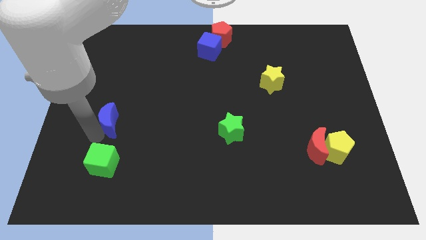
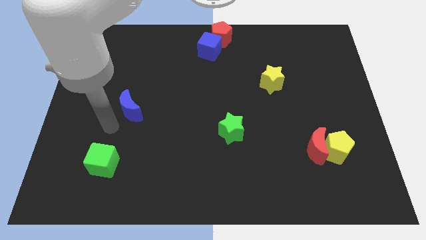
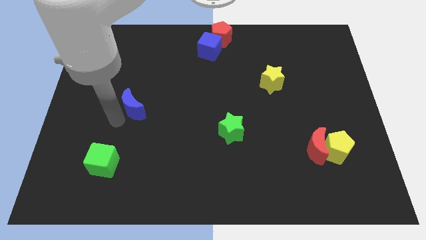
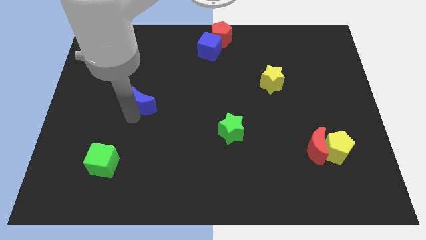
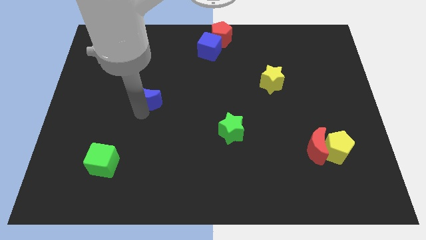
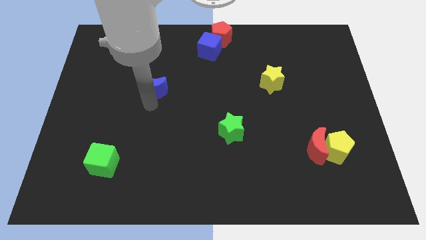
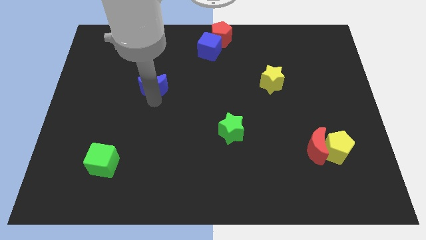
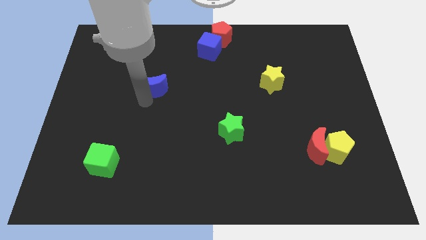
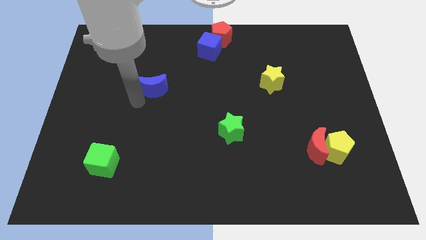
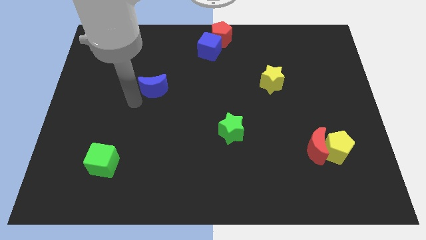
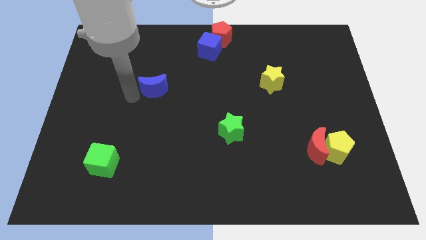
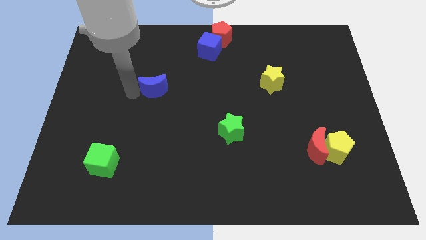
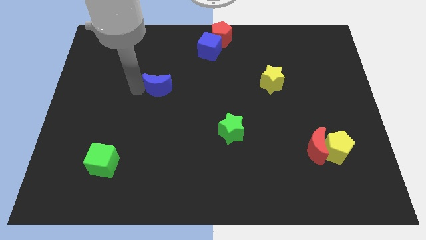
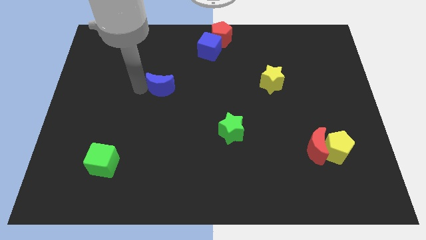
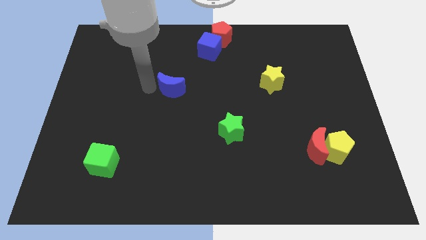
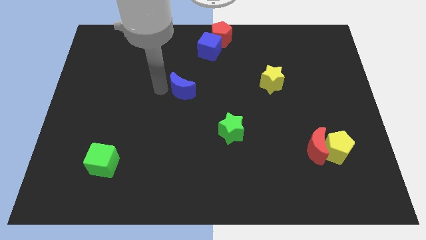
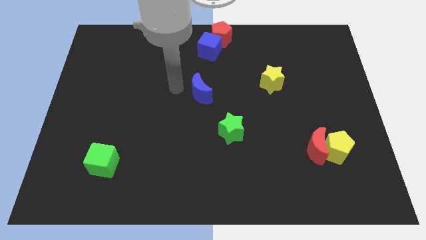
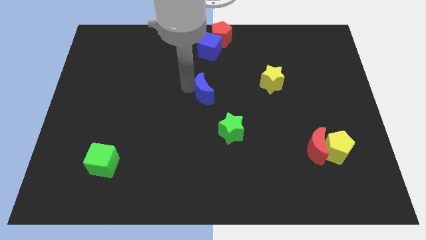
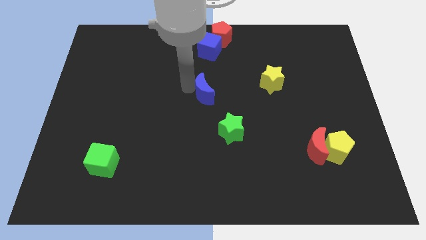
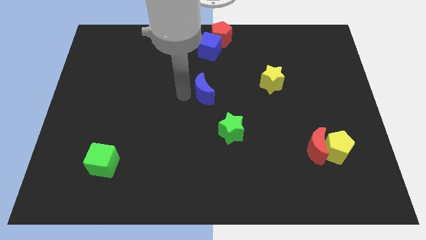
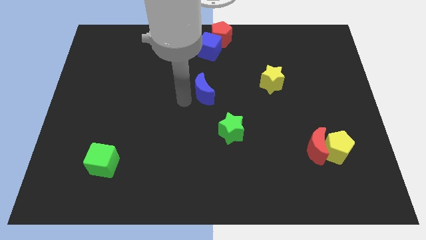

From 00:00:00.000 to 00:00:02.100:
put blue moon below the blue cube

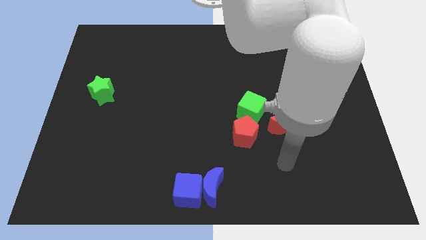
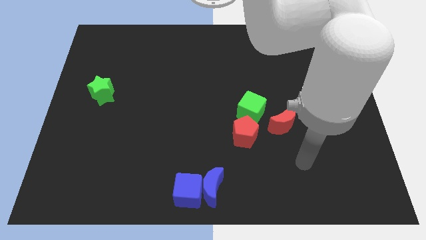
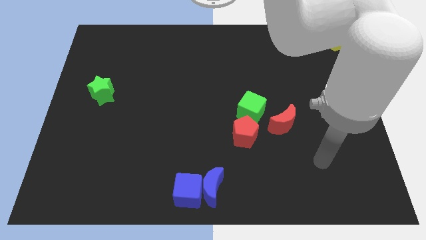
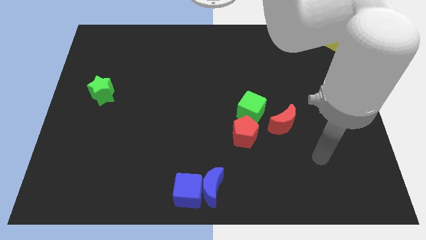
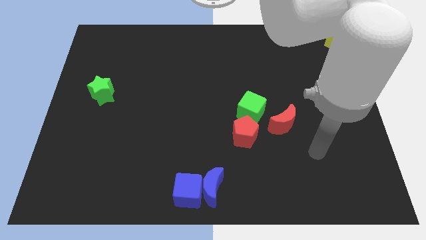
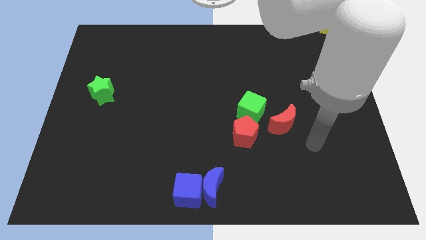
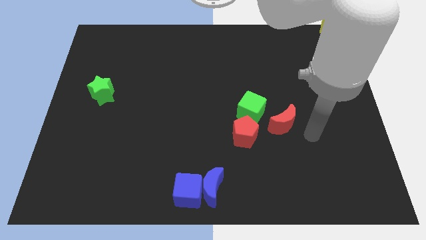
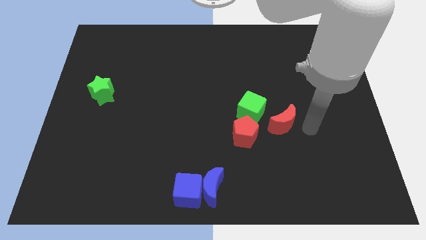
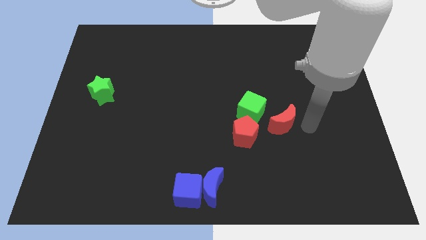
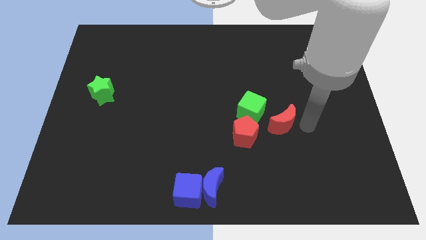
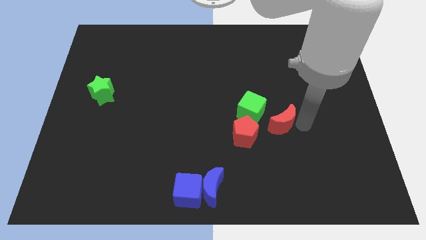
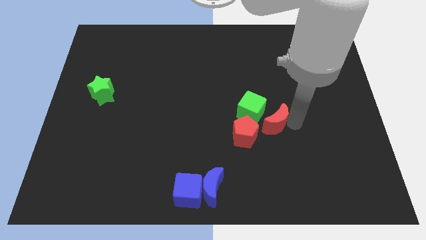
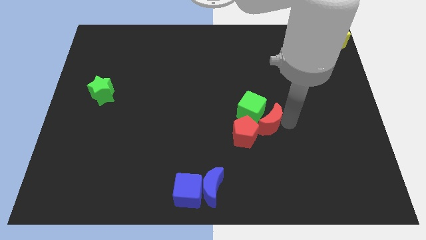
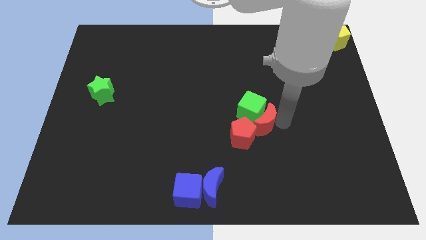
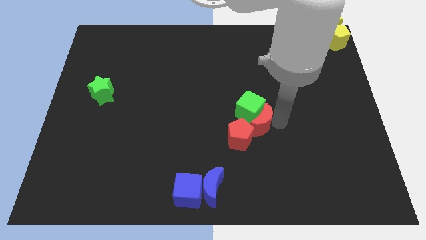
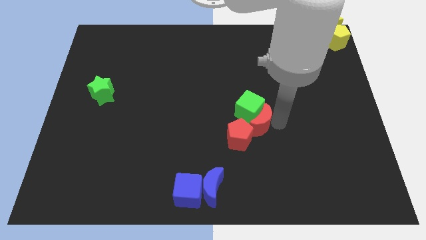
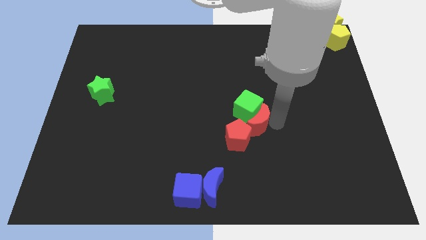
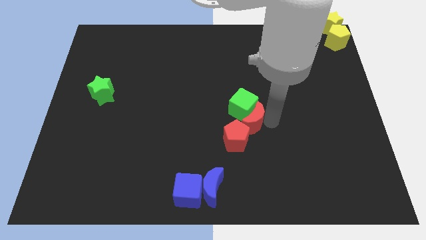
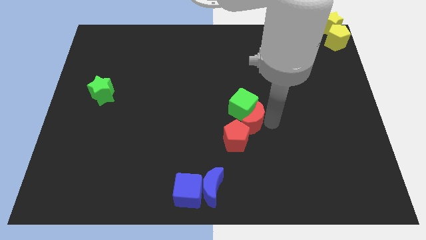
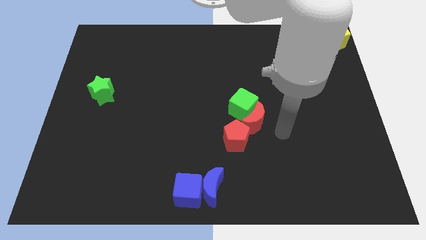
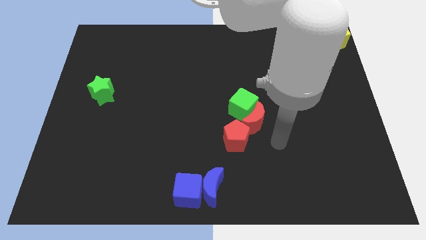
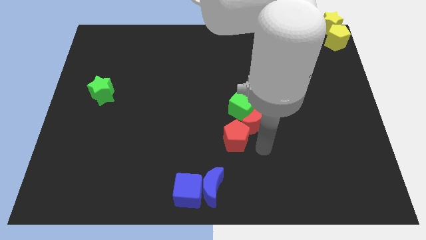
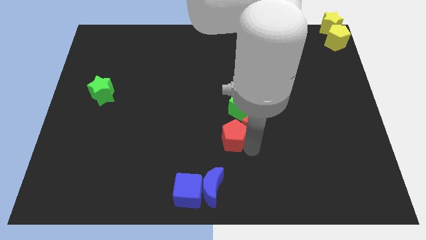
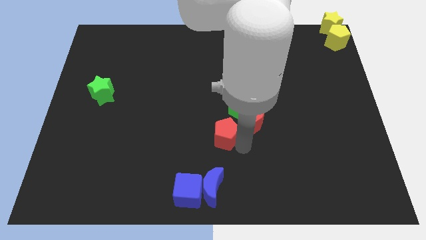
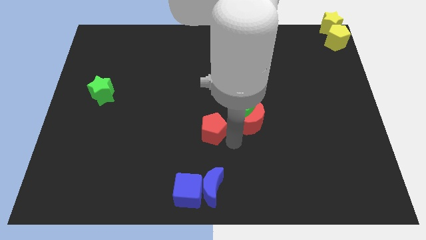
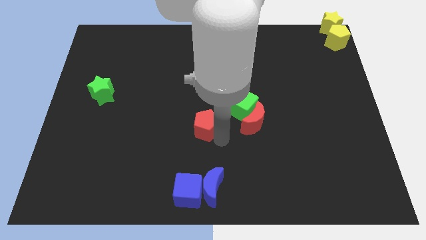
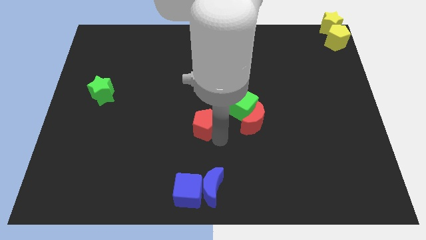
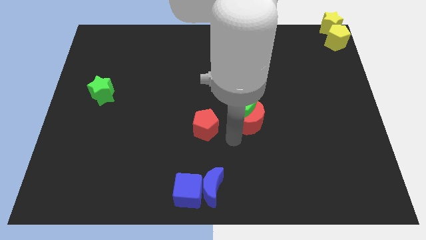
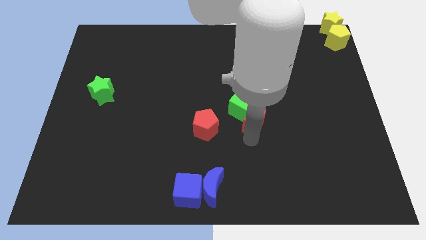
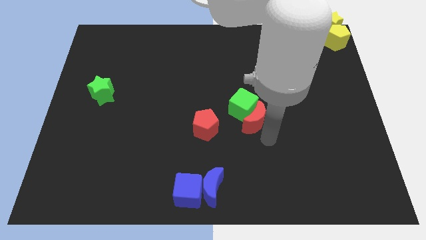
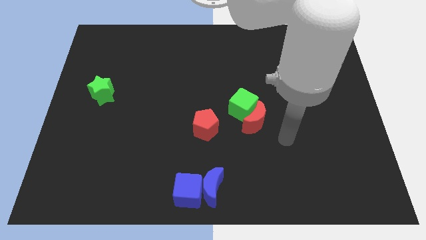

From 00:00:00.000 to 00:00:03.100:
place the red pentagon to left side of the board

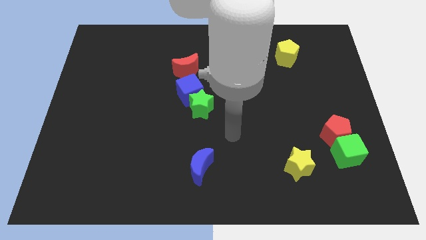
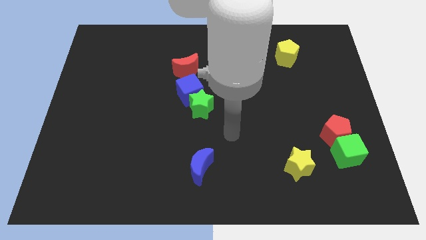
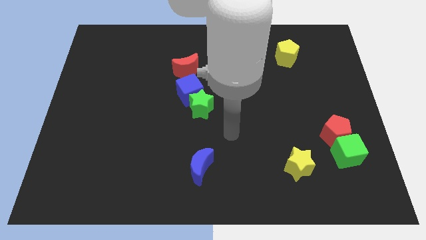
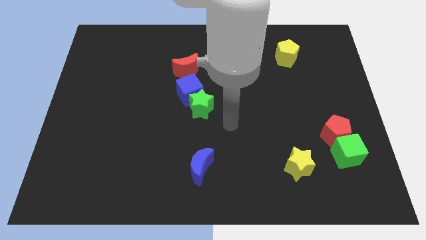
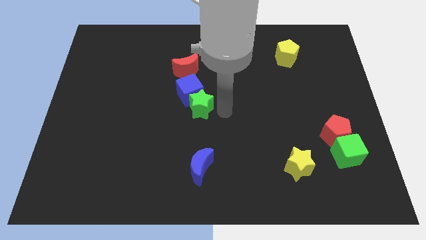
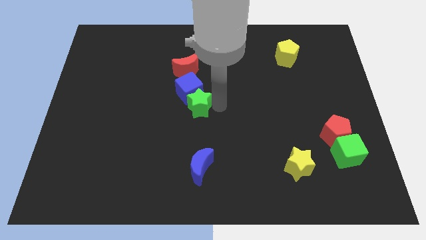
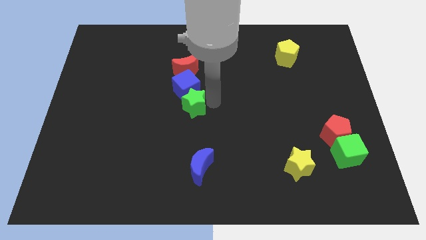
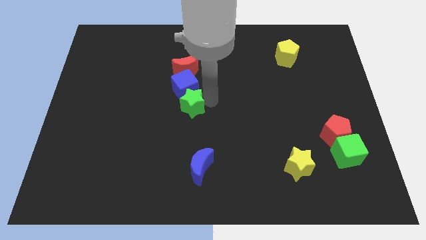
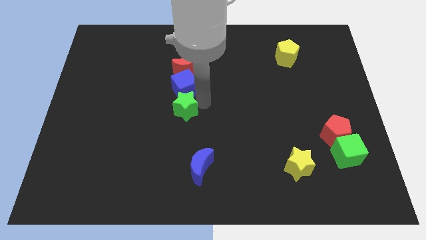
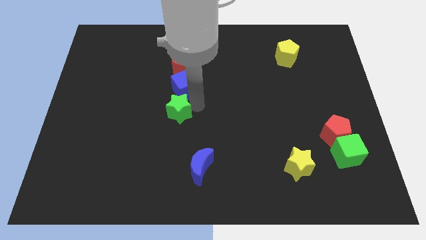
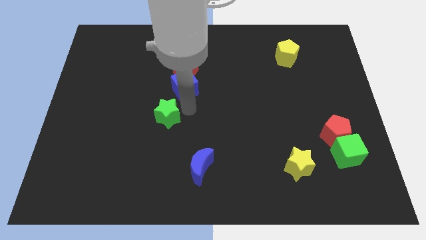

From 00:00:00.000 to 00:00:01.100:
push the green star into the blue cube

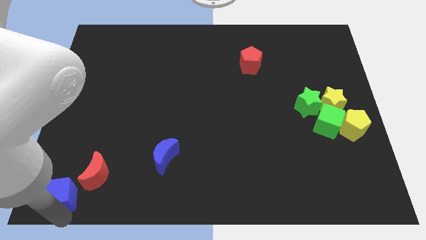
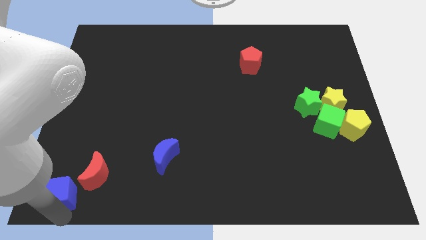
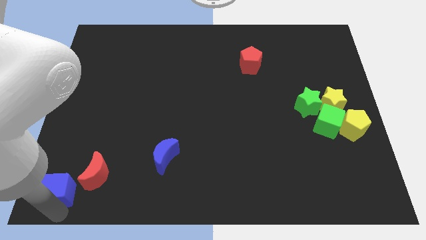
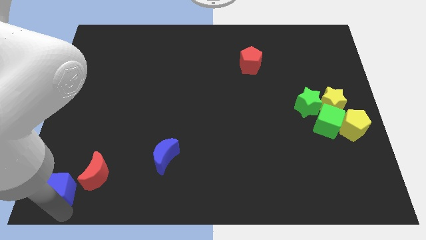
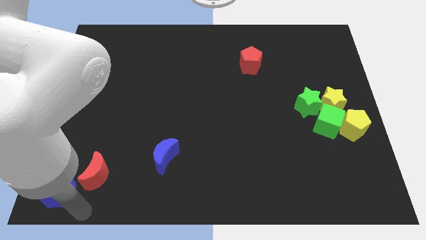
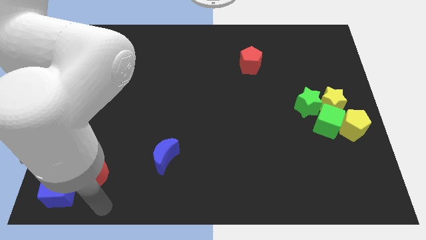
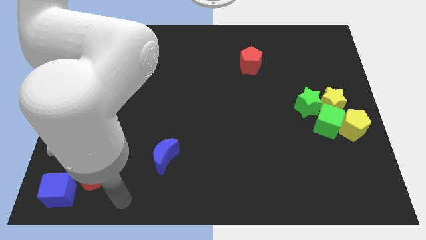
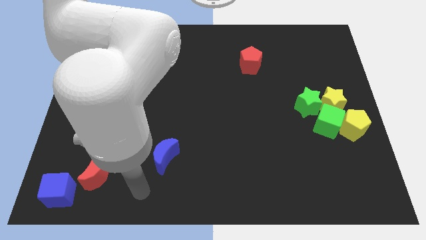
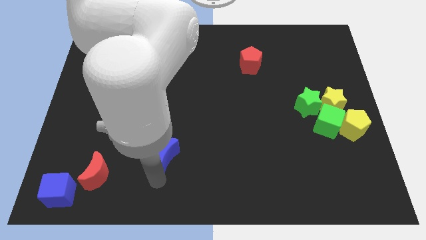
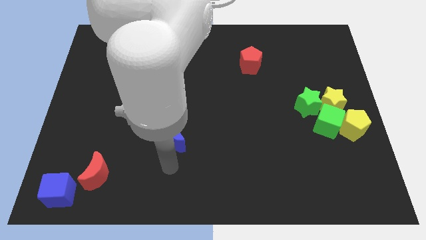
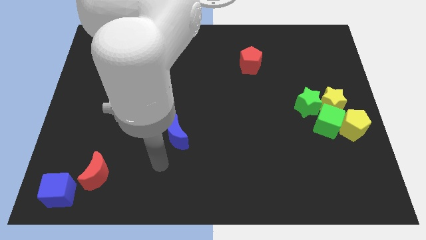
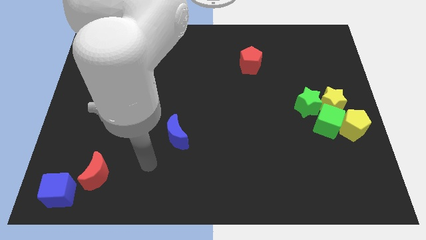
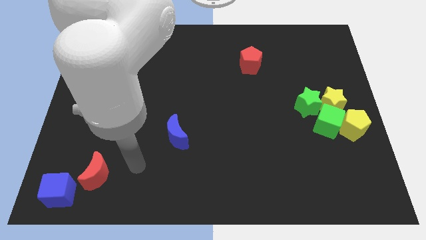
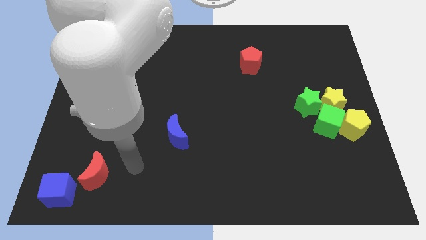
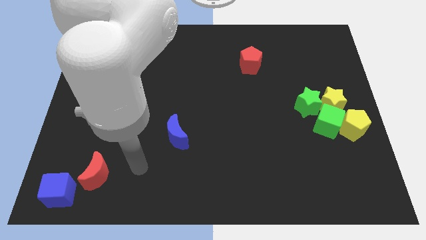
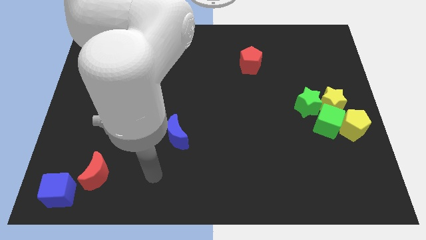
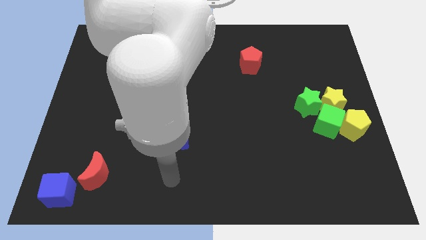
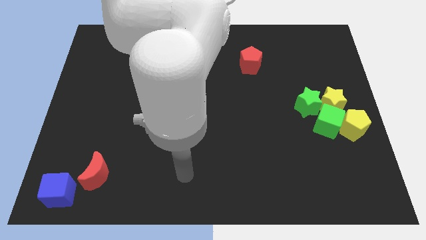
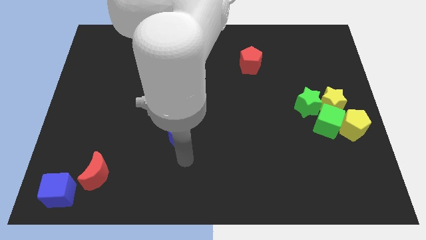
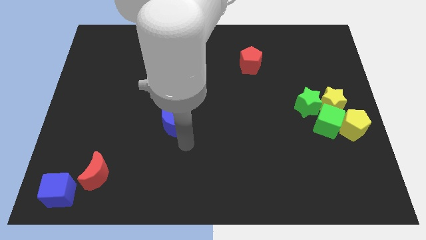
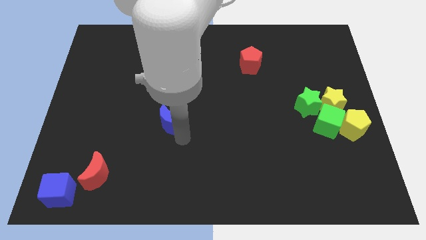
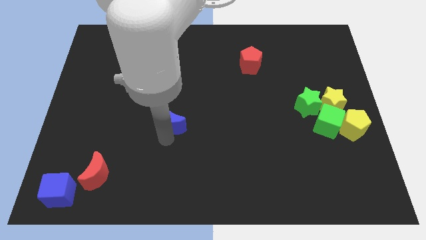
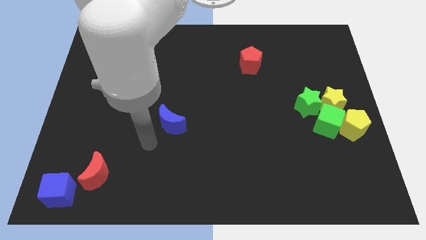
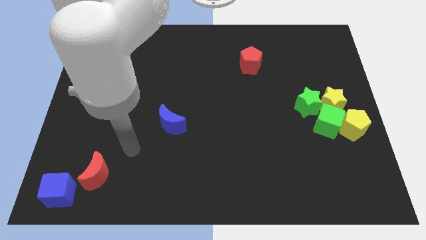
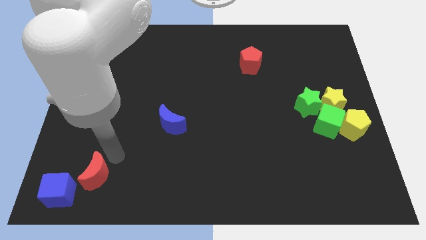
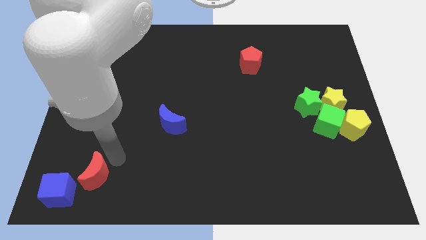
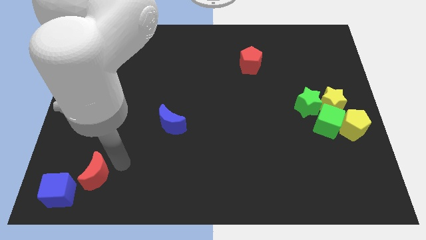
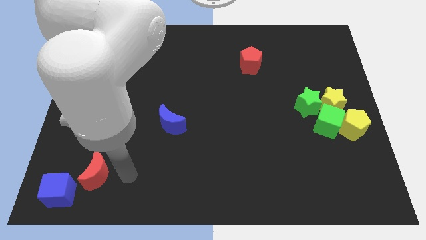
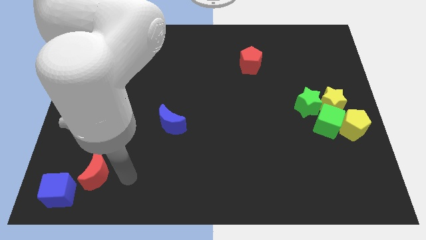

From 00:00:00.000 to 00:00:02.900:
move your arm away from the blue cube
